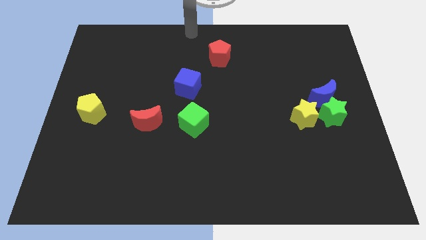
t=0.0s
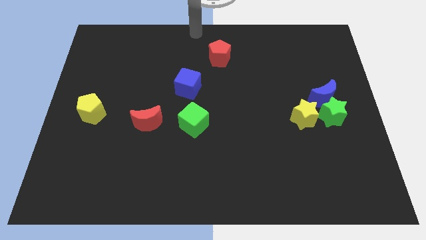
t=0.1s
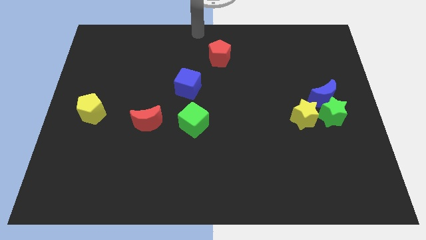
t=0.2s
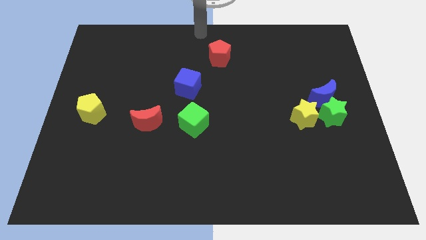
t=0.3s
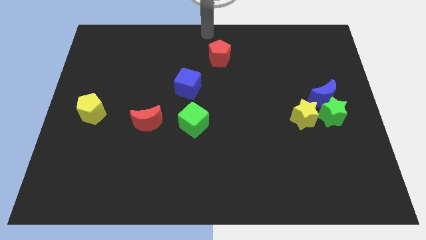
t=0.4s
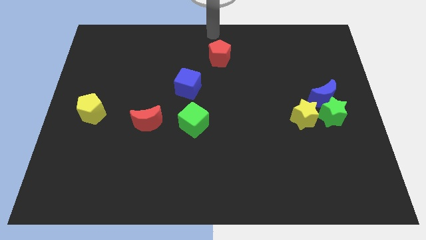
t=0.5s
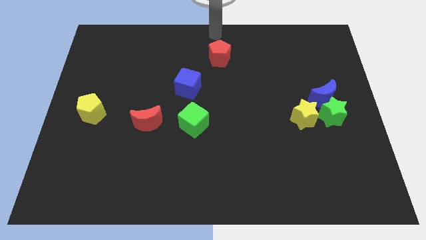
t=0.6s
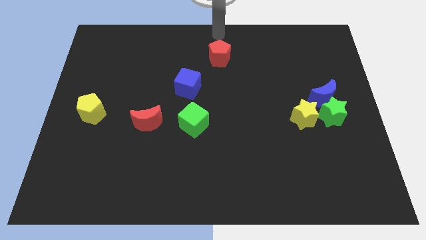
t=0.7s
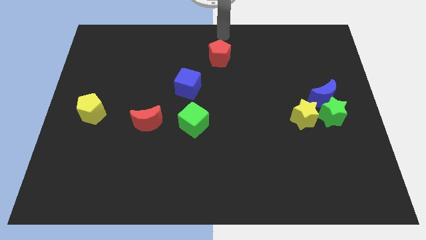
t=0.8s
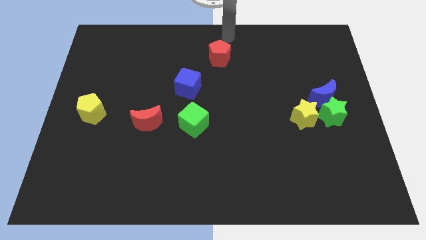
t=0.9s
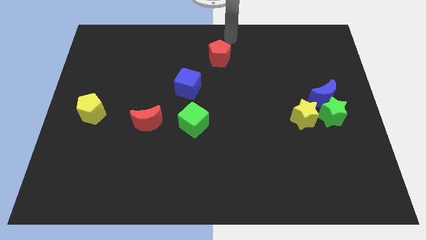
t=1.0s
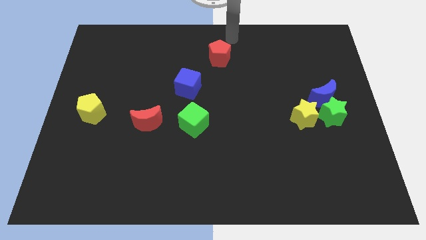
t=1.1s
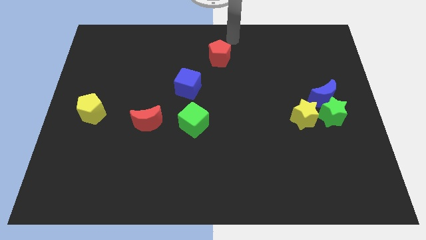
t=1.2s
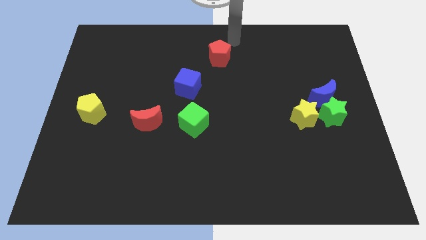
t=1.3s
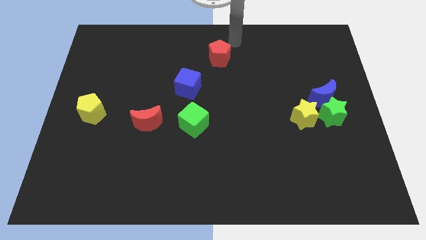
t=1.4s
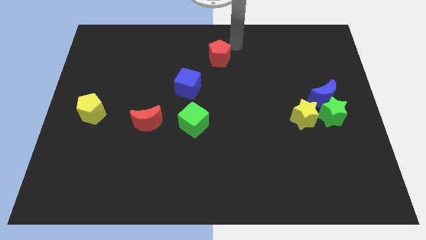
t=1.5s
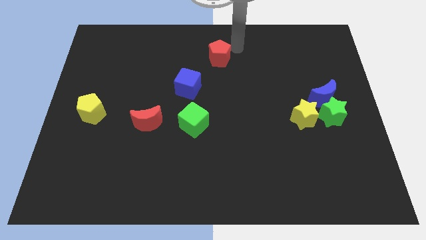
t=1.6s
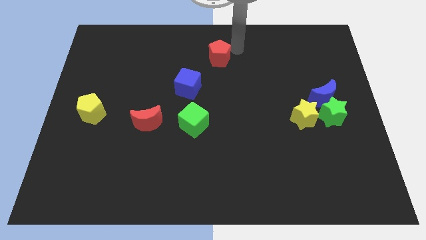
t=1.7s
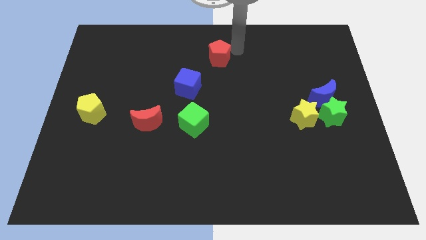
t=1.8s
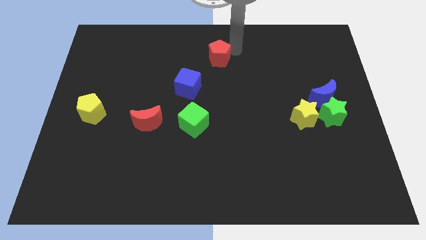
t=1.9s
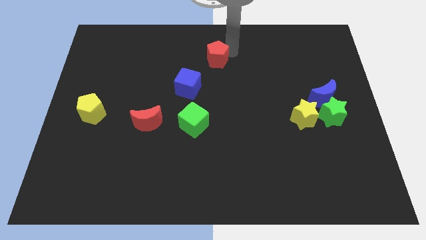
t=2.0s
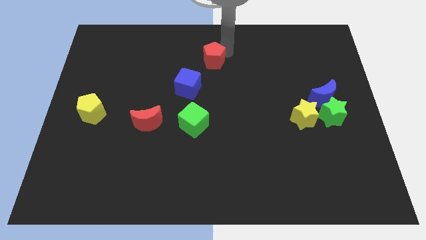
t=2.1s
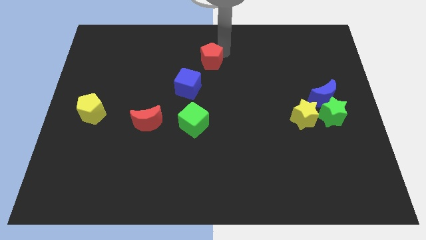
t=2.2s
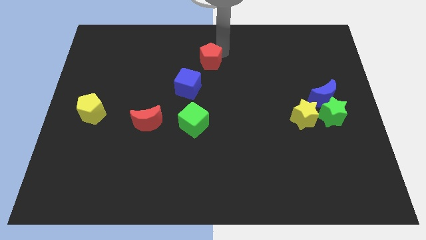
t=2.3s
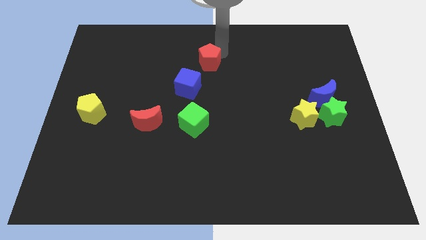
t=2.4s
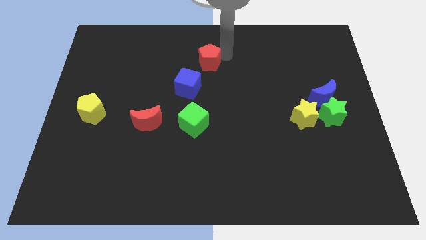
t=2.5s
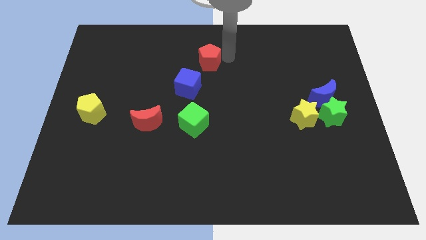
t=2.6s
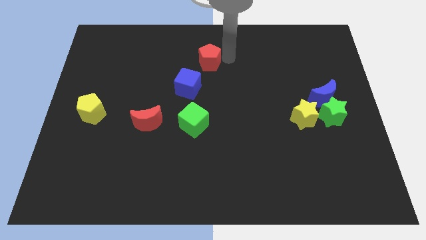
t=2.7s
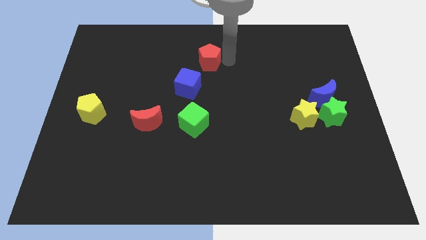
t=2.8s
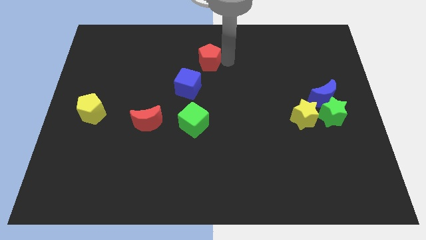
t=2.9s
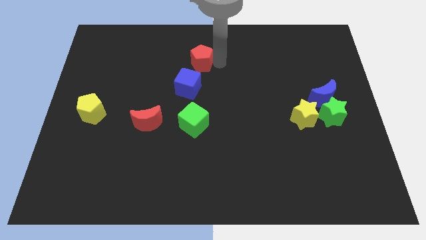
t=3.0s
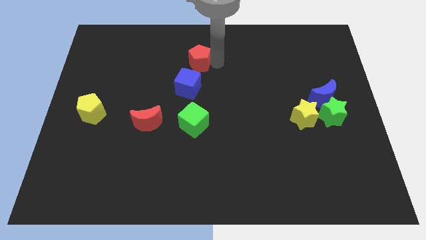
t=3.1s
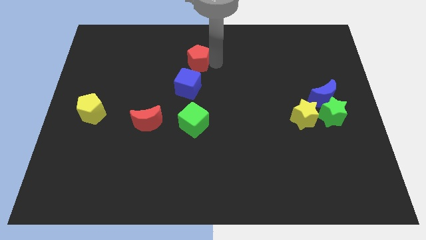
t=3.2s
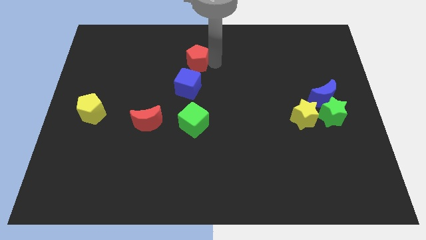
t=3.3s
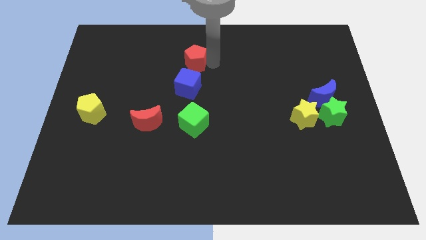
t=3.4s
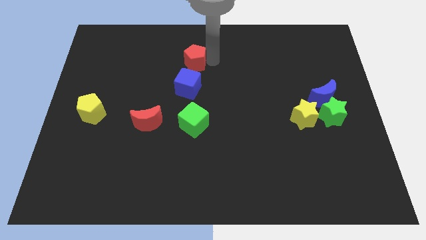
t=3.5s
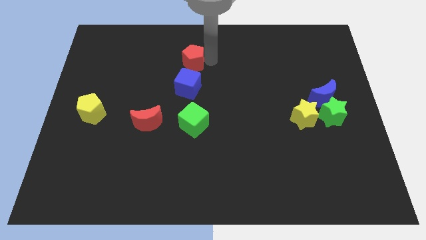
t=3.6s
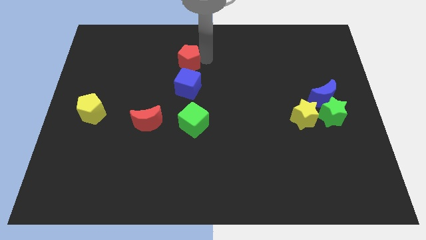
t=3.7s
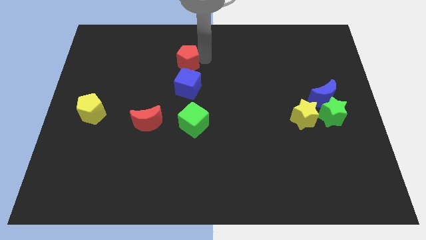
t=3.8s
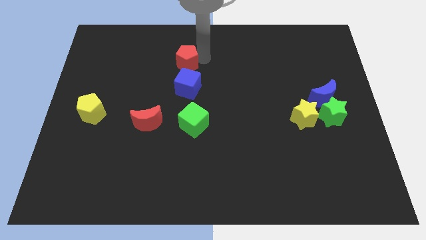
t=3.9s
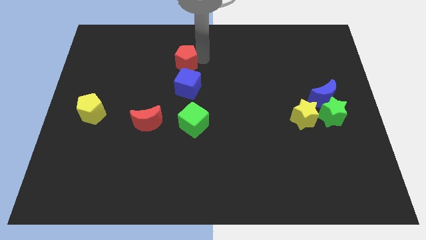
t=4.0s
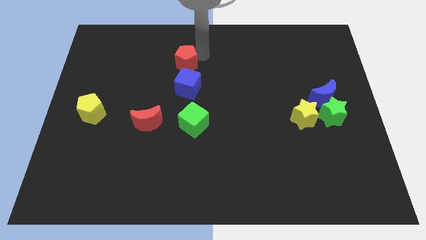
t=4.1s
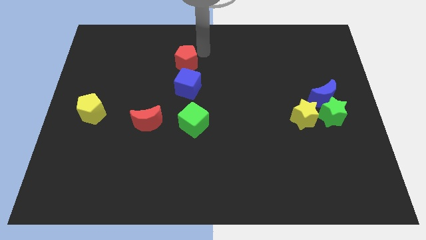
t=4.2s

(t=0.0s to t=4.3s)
place the red pentagon vertically above the top side of the blue cube

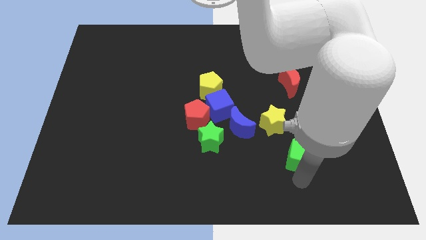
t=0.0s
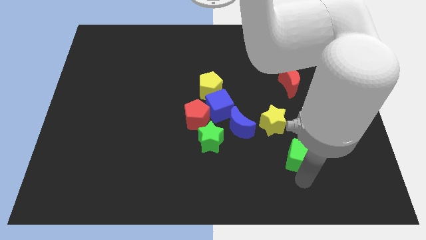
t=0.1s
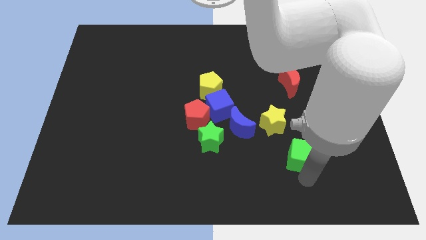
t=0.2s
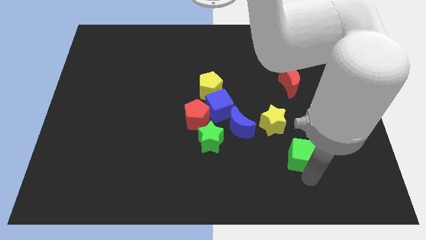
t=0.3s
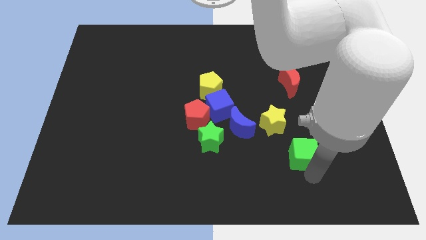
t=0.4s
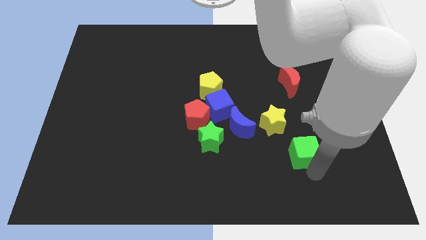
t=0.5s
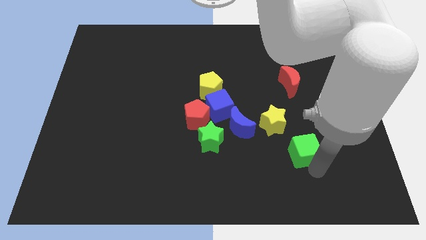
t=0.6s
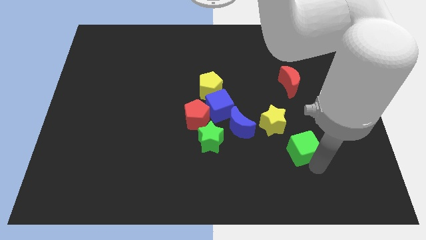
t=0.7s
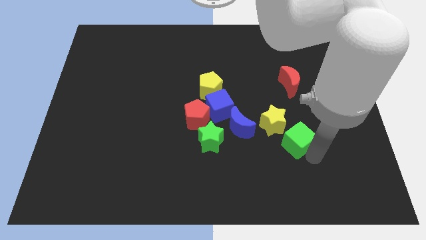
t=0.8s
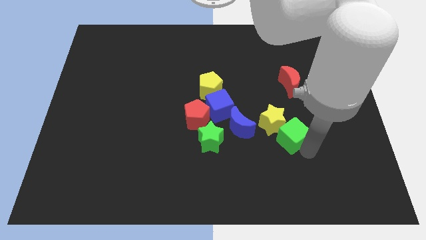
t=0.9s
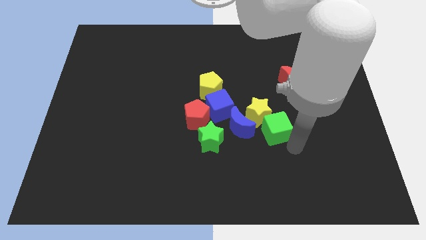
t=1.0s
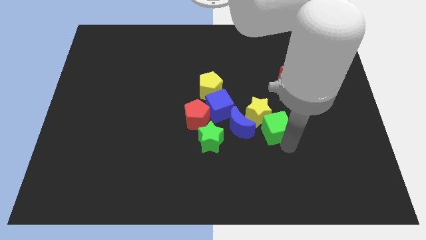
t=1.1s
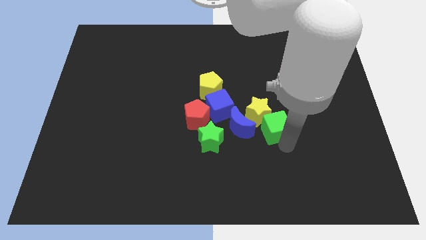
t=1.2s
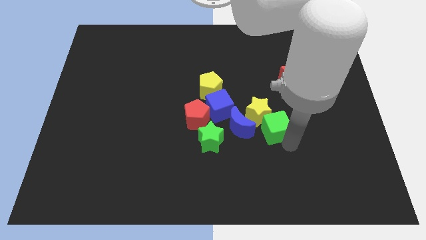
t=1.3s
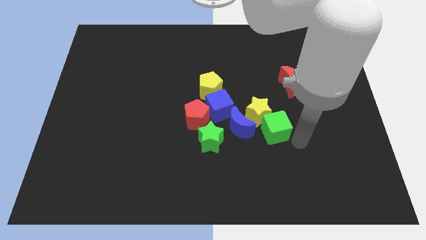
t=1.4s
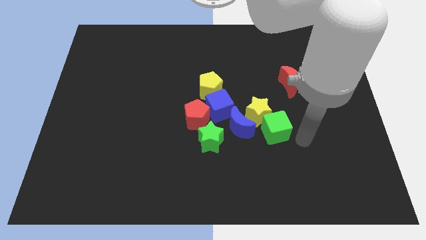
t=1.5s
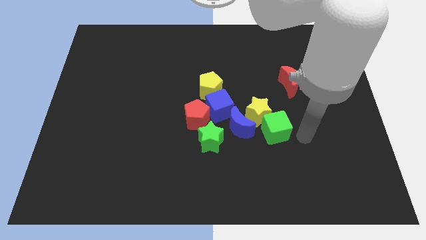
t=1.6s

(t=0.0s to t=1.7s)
push the green cube into the yellow star

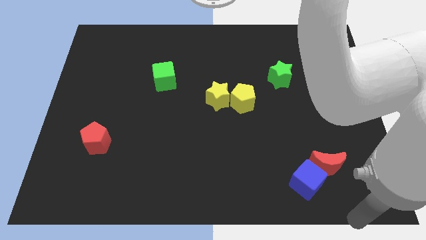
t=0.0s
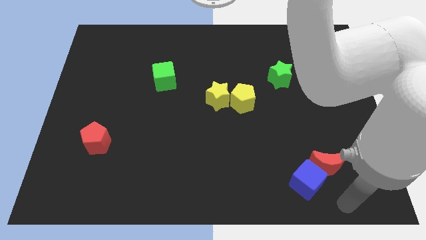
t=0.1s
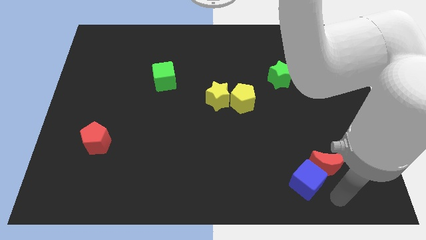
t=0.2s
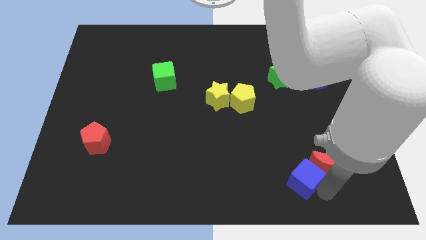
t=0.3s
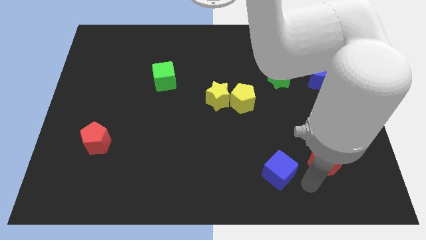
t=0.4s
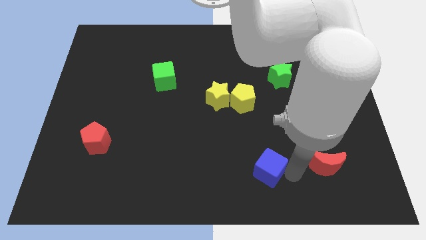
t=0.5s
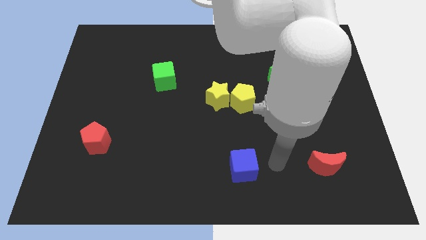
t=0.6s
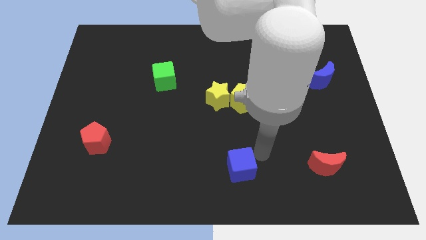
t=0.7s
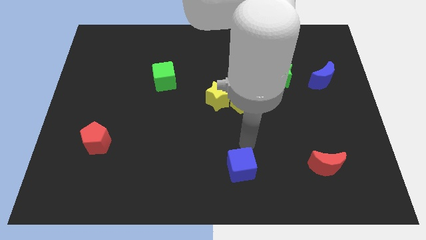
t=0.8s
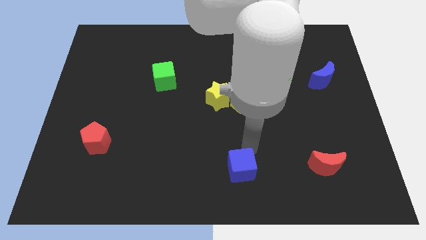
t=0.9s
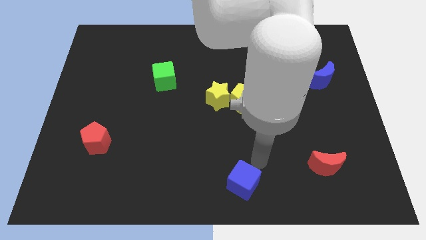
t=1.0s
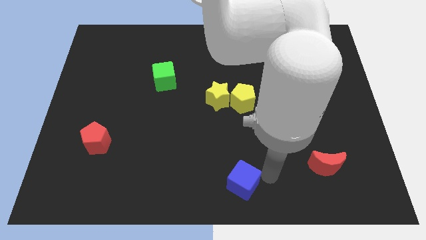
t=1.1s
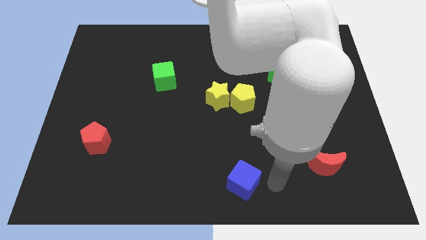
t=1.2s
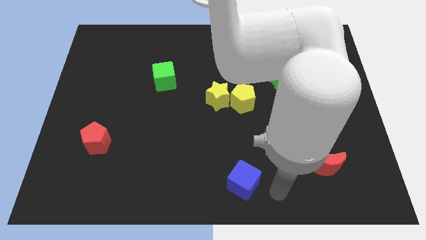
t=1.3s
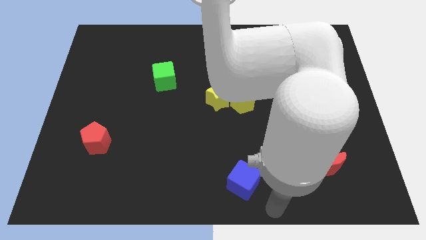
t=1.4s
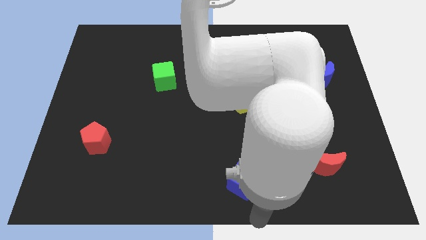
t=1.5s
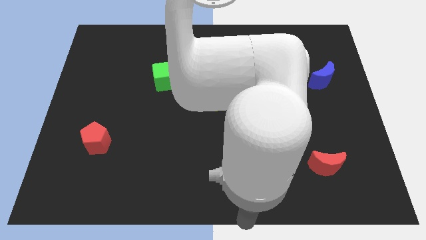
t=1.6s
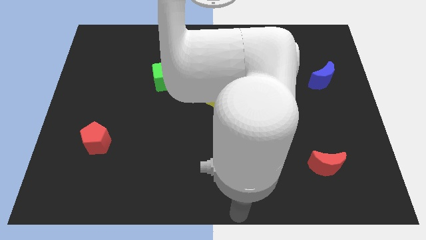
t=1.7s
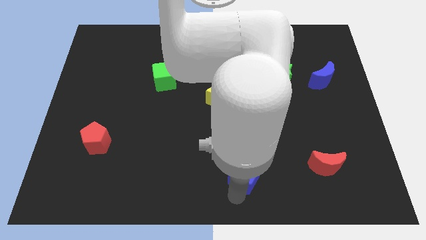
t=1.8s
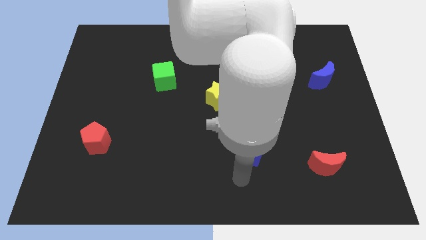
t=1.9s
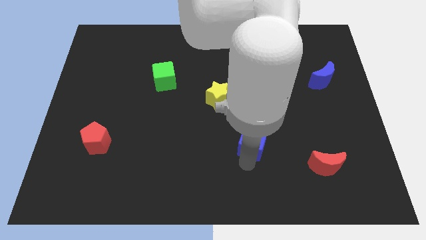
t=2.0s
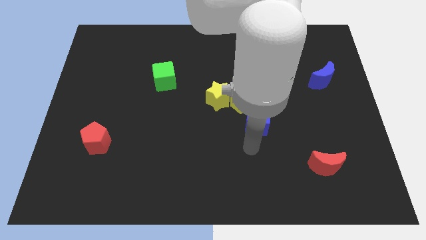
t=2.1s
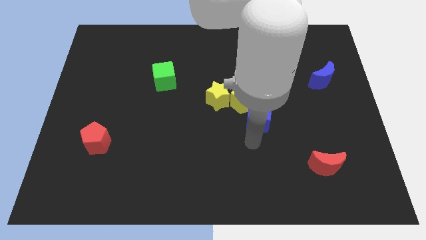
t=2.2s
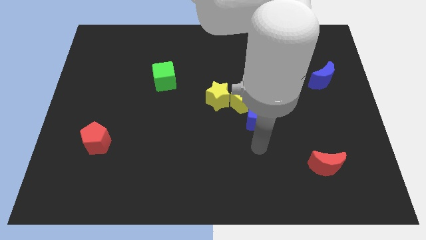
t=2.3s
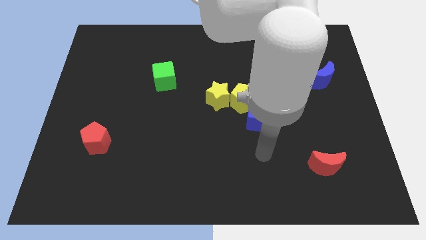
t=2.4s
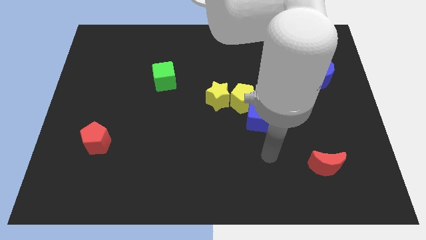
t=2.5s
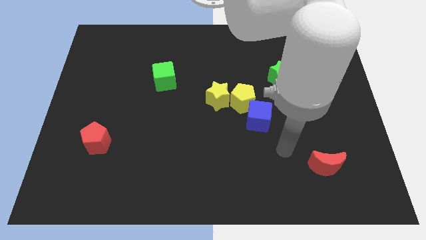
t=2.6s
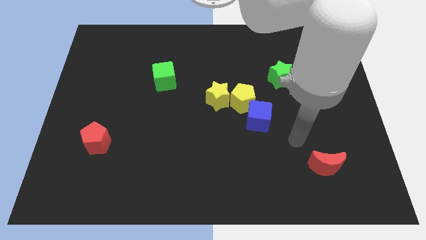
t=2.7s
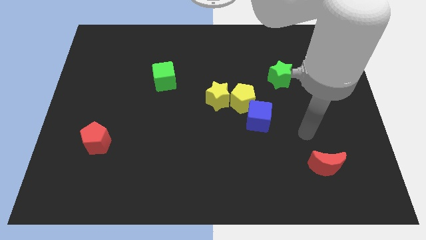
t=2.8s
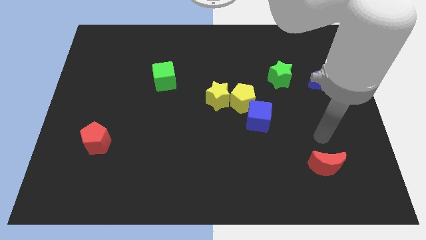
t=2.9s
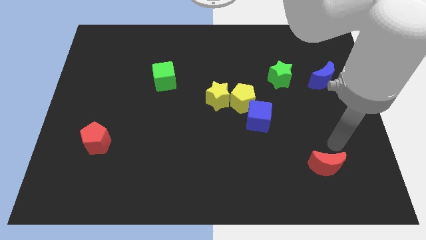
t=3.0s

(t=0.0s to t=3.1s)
place the blue cube below to the yellow pentagon
